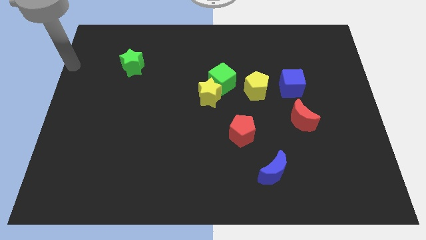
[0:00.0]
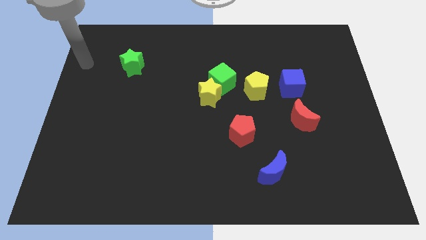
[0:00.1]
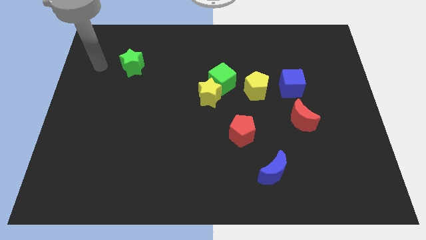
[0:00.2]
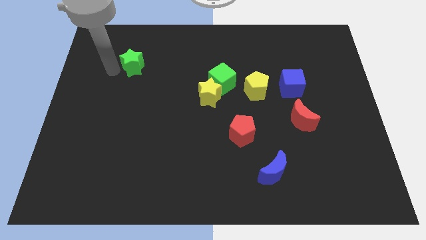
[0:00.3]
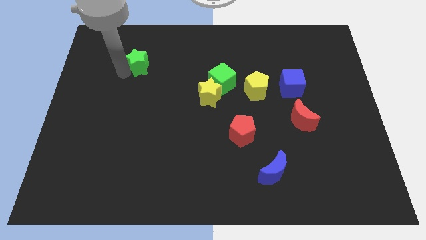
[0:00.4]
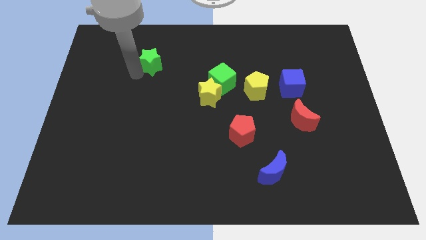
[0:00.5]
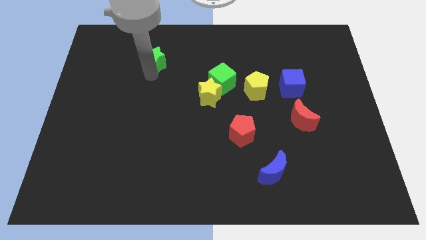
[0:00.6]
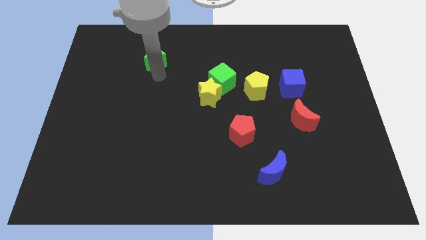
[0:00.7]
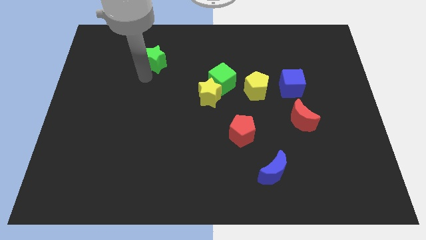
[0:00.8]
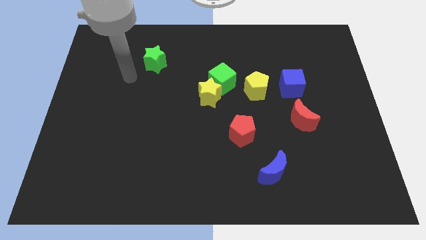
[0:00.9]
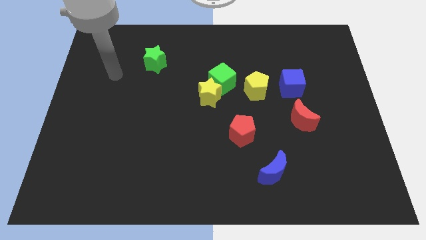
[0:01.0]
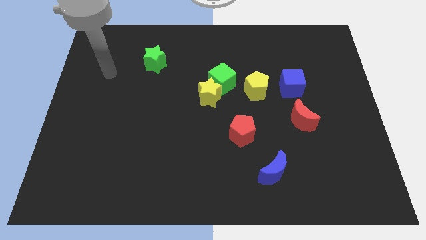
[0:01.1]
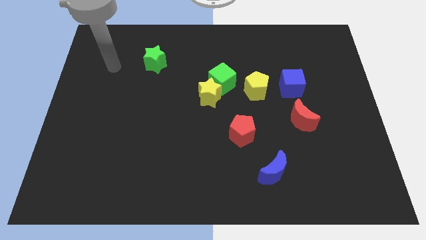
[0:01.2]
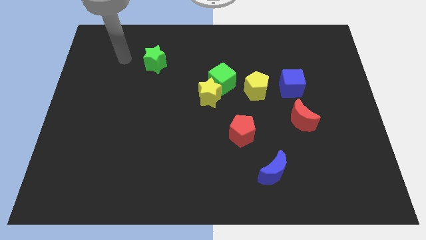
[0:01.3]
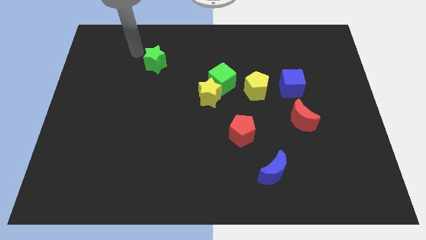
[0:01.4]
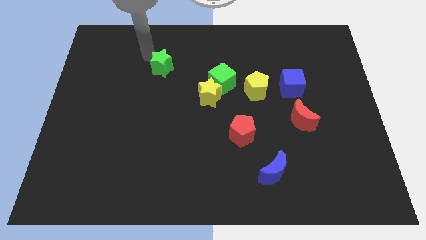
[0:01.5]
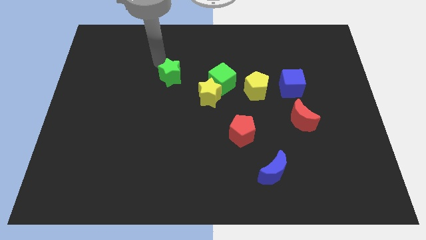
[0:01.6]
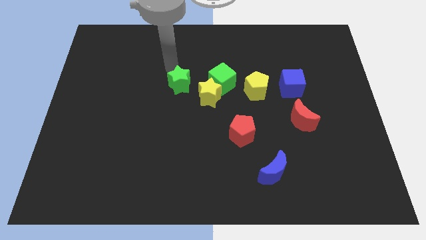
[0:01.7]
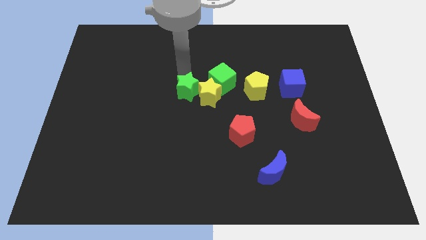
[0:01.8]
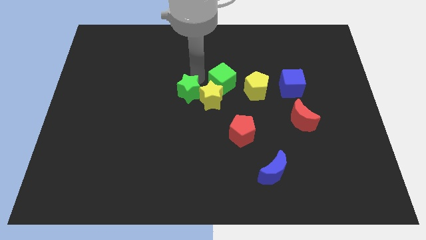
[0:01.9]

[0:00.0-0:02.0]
push the green star into the yellow star

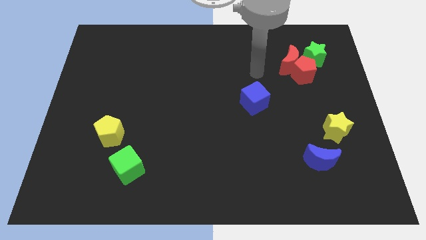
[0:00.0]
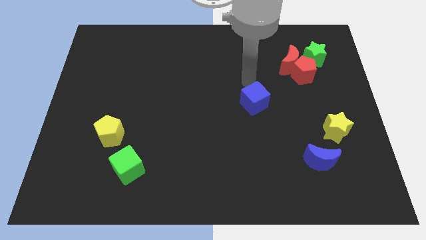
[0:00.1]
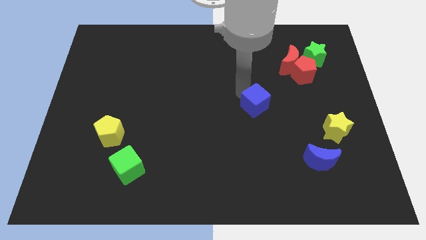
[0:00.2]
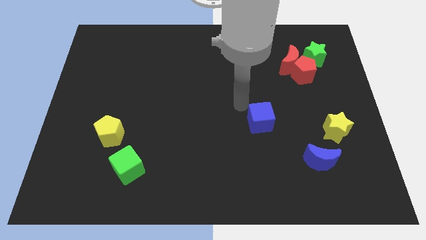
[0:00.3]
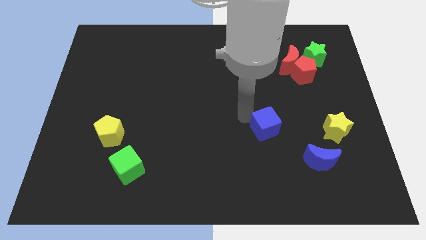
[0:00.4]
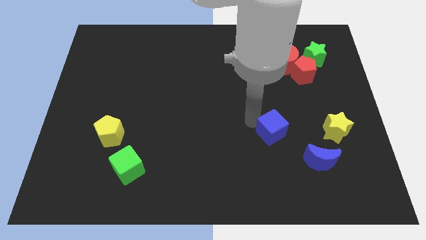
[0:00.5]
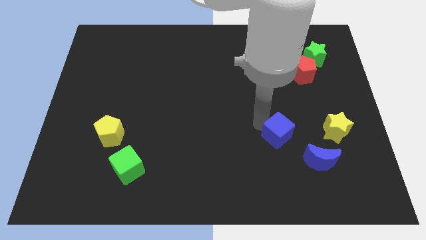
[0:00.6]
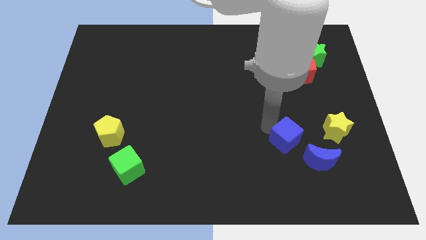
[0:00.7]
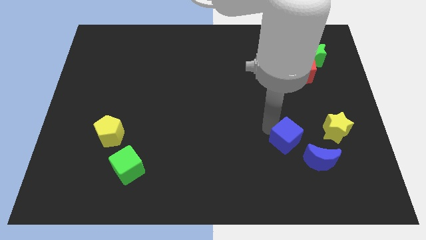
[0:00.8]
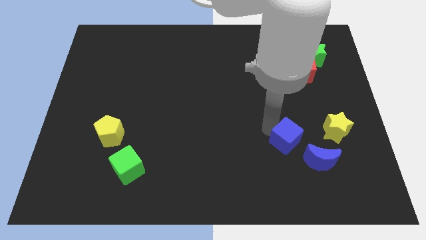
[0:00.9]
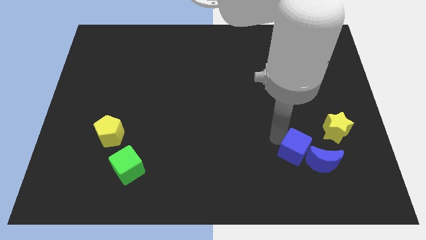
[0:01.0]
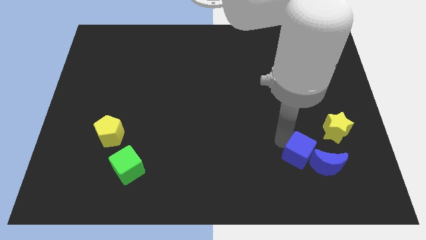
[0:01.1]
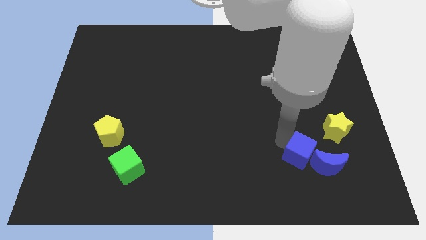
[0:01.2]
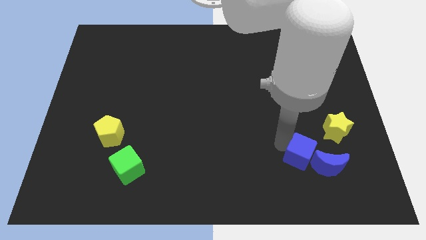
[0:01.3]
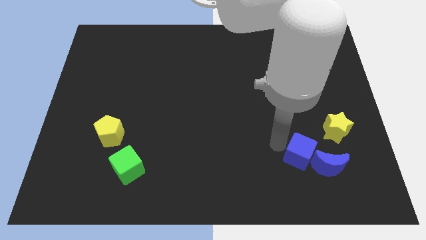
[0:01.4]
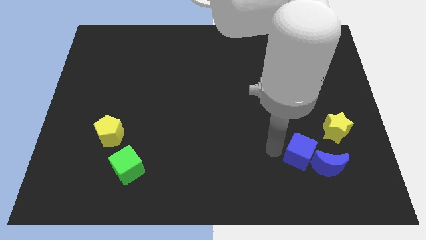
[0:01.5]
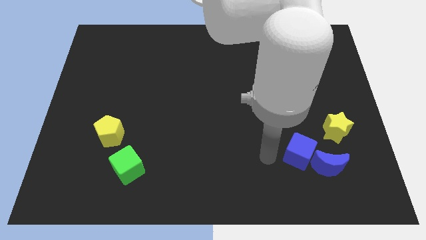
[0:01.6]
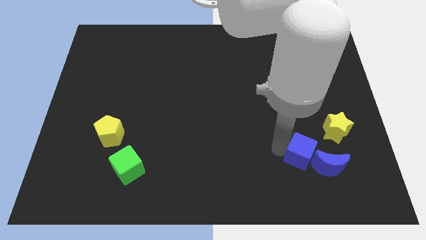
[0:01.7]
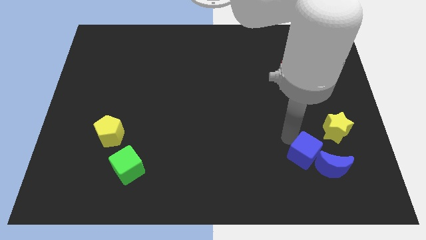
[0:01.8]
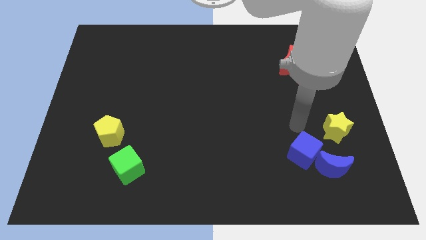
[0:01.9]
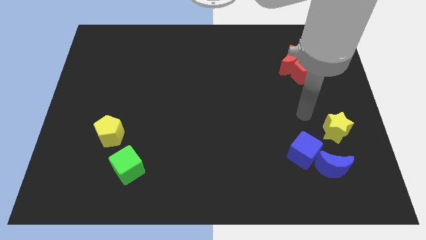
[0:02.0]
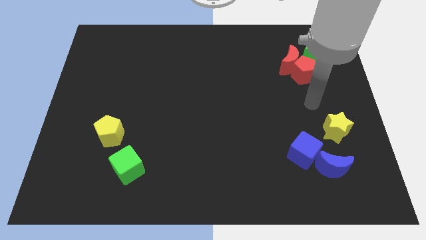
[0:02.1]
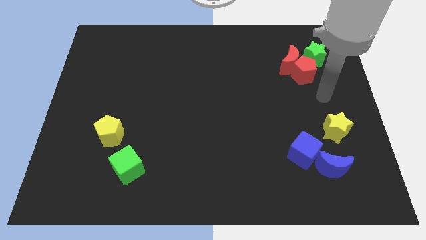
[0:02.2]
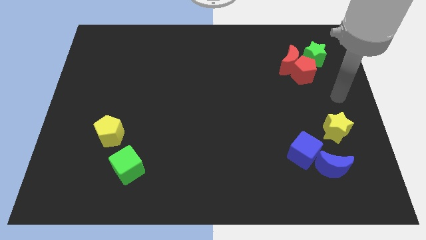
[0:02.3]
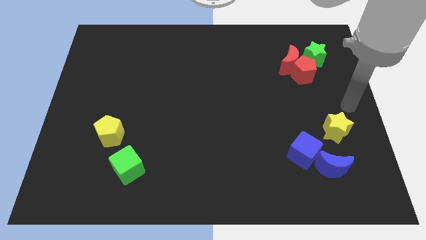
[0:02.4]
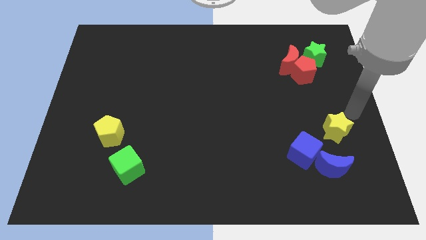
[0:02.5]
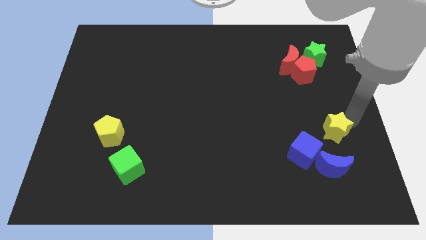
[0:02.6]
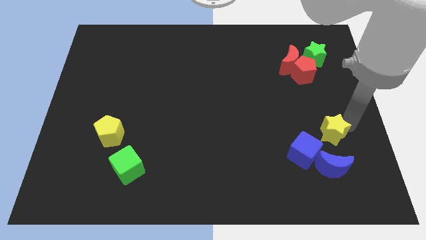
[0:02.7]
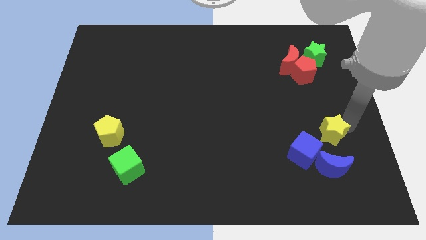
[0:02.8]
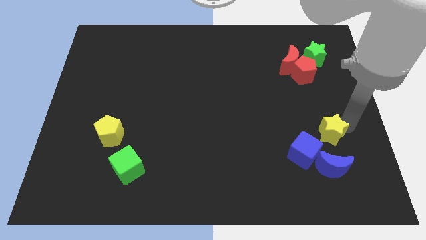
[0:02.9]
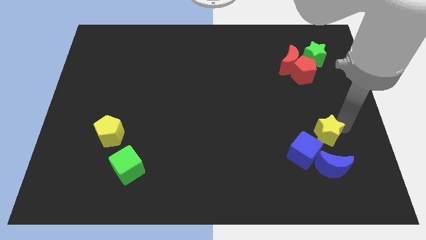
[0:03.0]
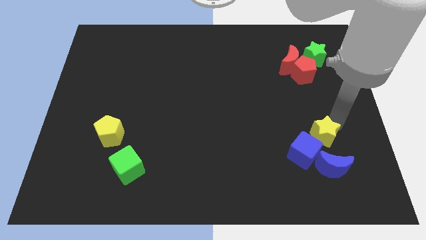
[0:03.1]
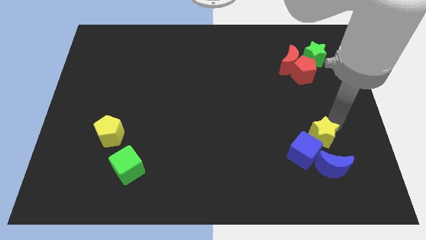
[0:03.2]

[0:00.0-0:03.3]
push the blue cube into the blue crescent along with the yellow star

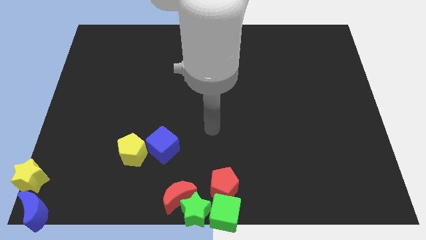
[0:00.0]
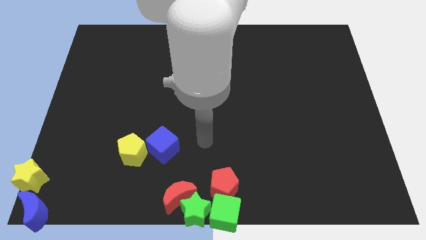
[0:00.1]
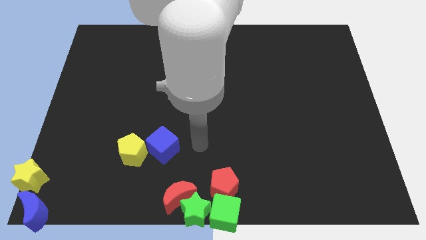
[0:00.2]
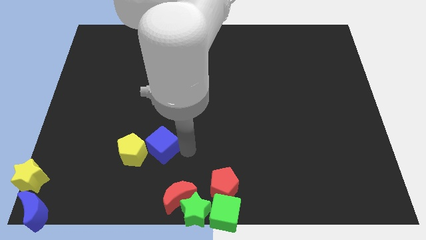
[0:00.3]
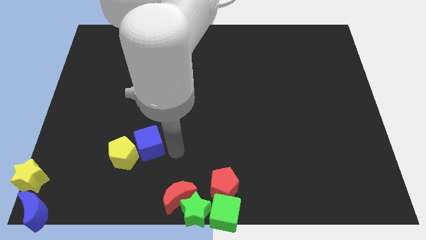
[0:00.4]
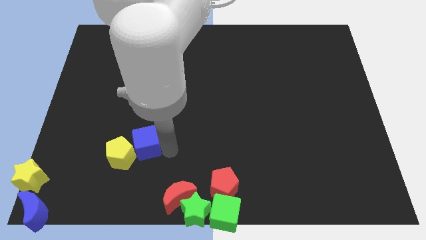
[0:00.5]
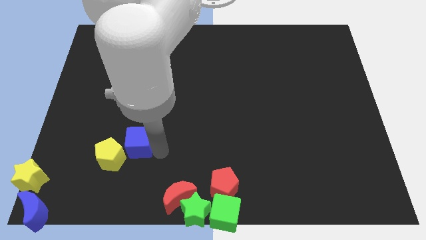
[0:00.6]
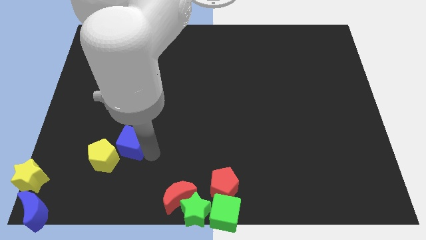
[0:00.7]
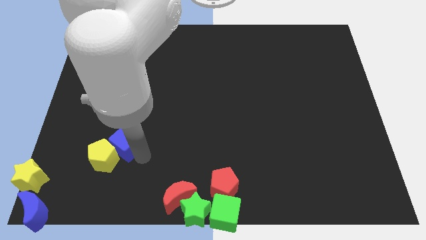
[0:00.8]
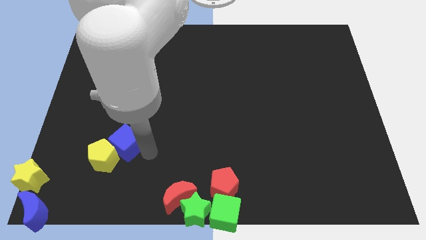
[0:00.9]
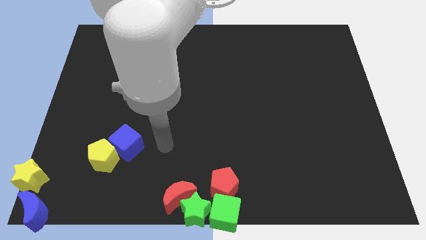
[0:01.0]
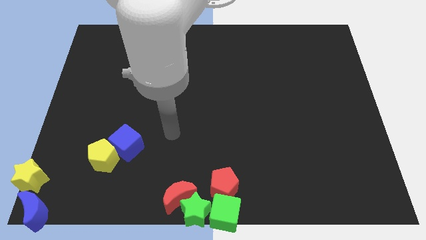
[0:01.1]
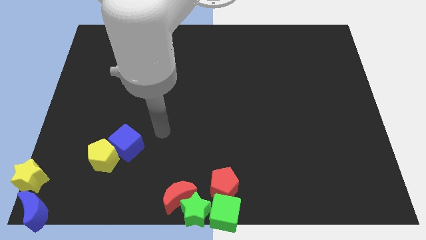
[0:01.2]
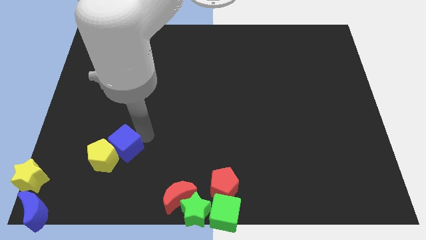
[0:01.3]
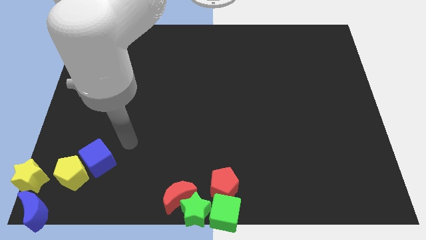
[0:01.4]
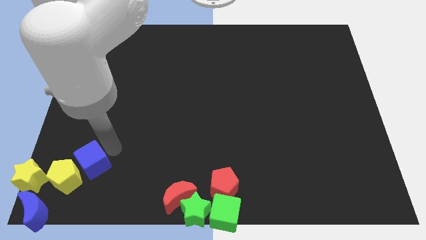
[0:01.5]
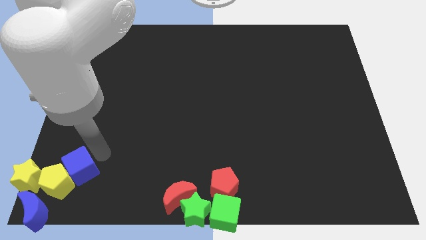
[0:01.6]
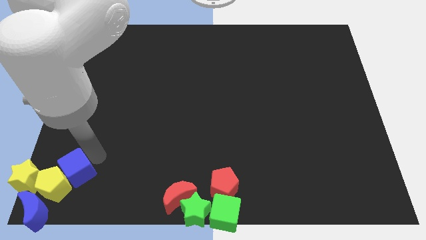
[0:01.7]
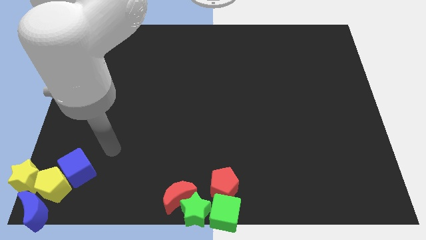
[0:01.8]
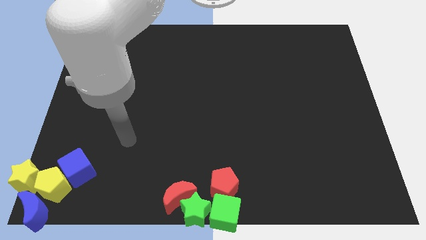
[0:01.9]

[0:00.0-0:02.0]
push the yellow pentagon with a blue cube to the bottom left of the board

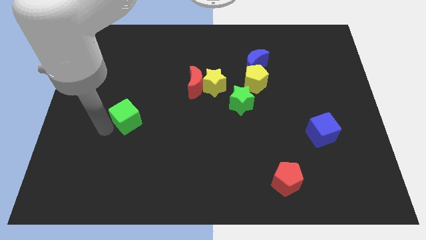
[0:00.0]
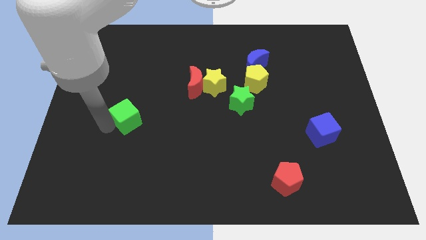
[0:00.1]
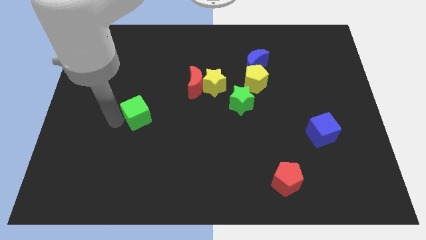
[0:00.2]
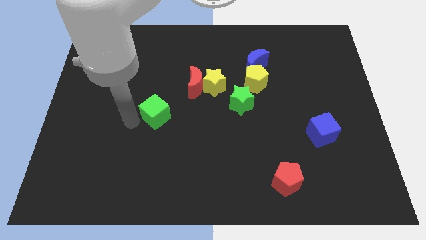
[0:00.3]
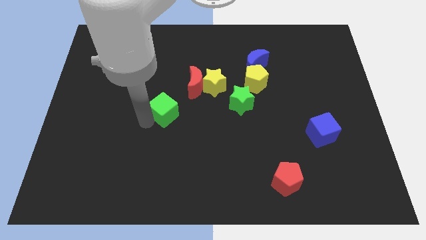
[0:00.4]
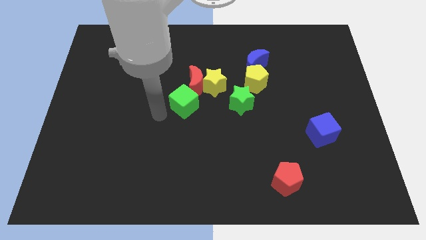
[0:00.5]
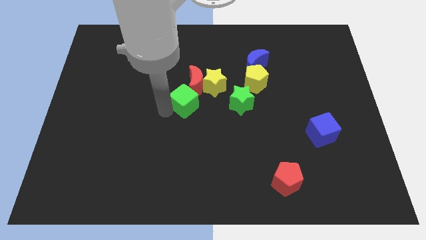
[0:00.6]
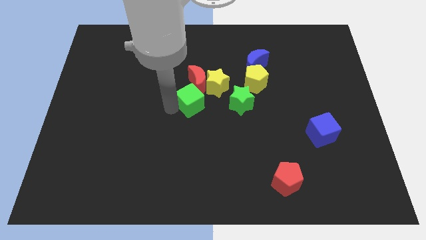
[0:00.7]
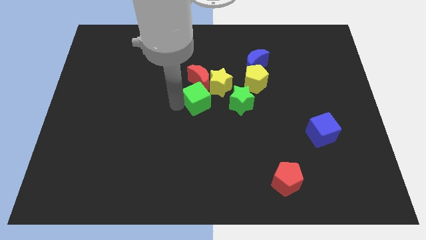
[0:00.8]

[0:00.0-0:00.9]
place green cube parallel to green star

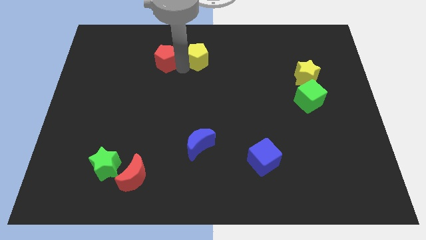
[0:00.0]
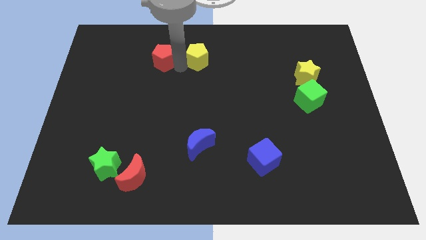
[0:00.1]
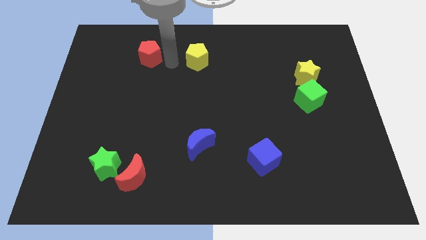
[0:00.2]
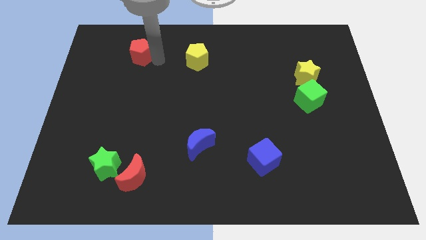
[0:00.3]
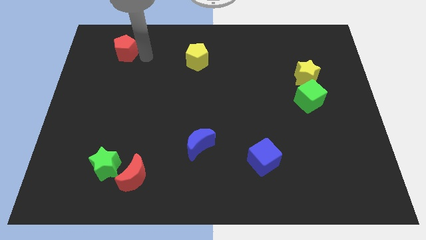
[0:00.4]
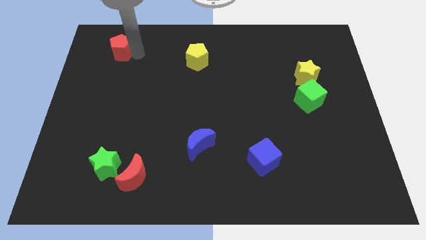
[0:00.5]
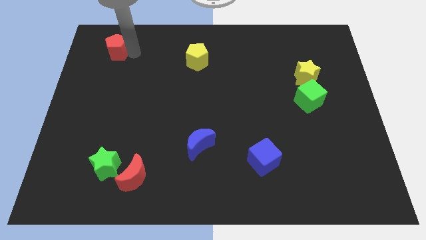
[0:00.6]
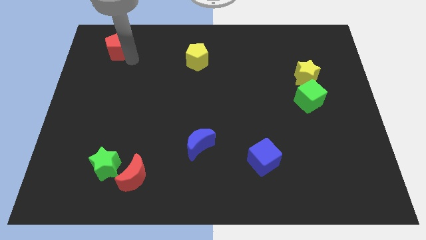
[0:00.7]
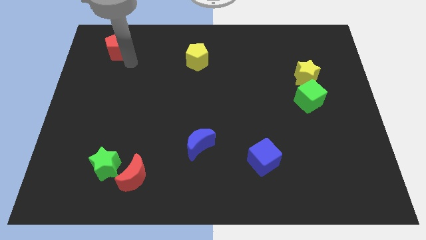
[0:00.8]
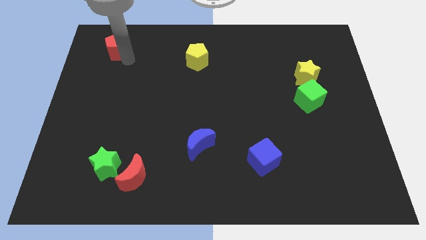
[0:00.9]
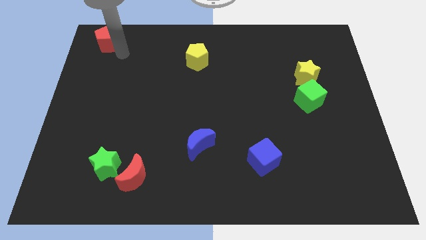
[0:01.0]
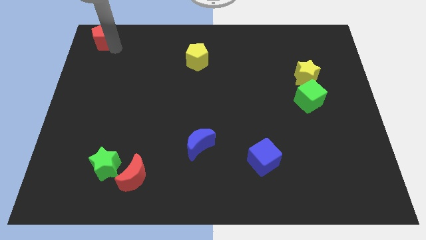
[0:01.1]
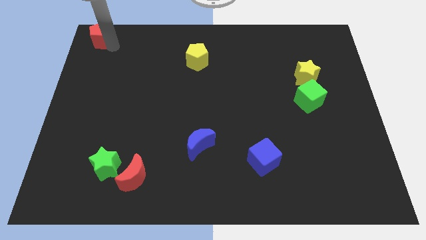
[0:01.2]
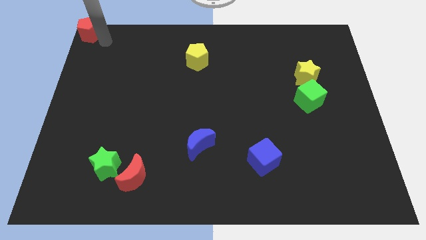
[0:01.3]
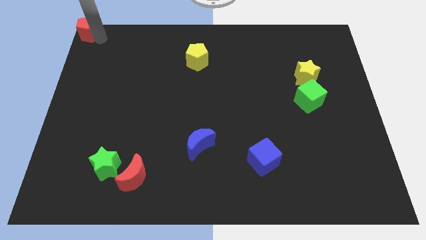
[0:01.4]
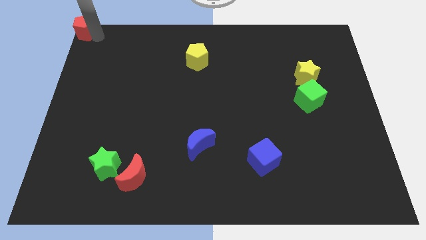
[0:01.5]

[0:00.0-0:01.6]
push the red pentagon to the top left corner of the board
